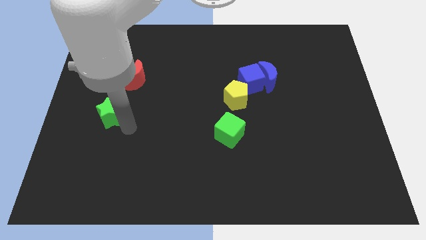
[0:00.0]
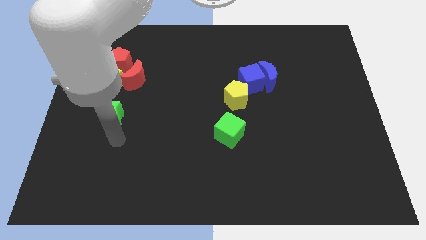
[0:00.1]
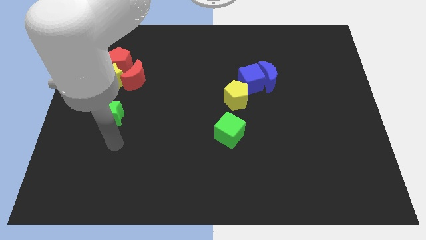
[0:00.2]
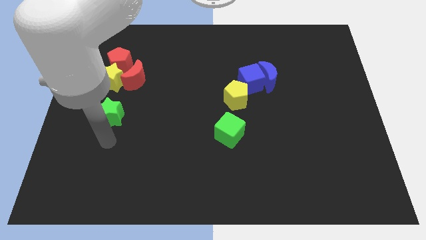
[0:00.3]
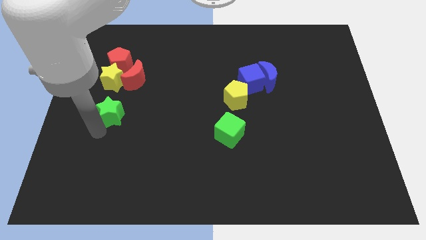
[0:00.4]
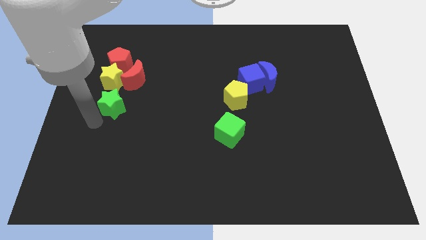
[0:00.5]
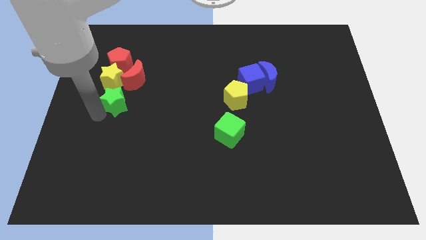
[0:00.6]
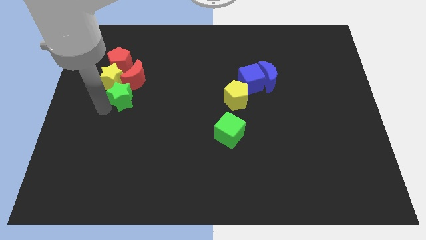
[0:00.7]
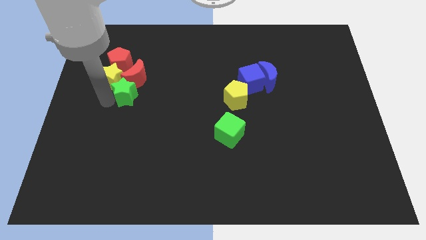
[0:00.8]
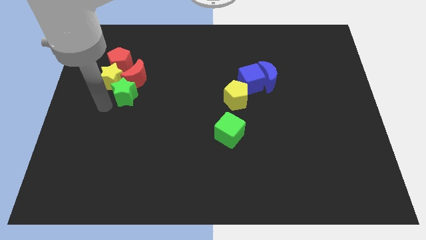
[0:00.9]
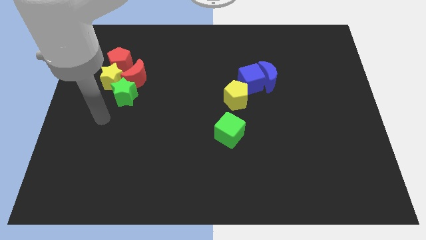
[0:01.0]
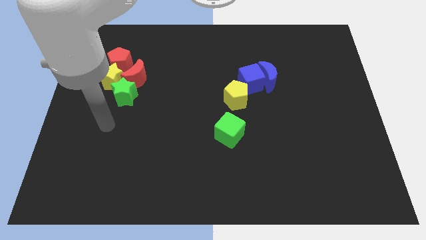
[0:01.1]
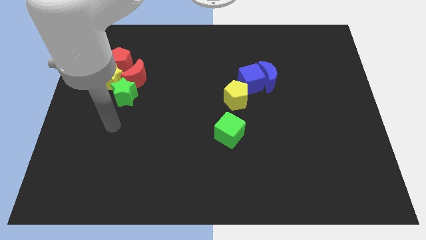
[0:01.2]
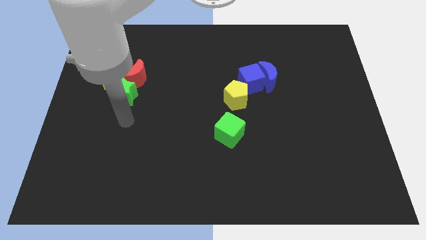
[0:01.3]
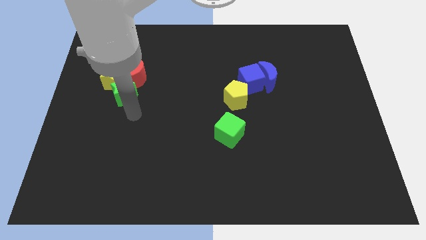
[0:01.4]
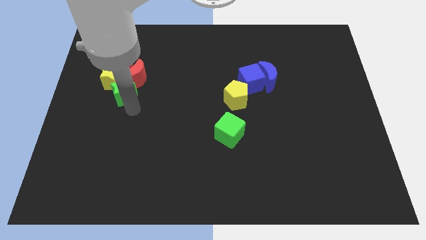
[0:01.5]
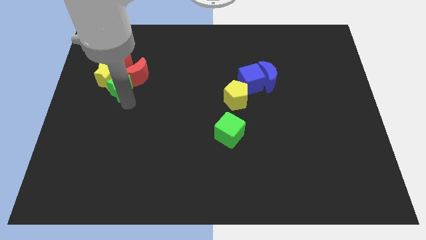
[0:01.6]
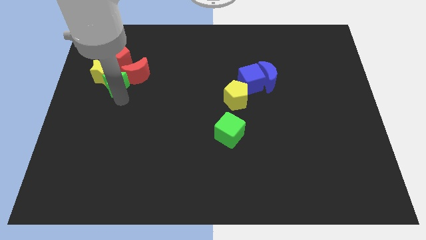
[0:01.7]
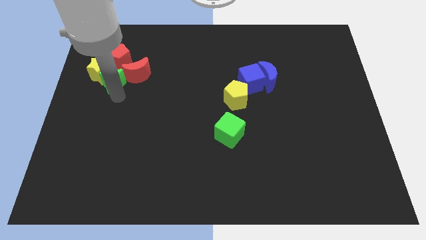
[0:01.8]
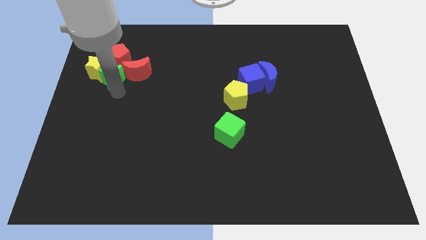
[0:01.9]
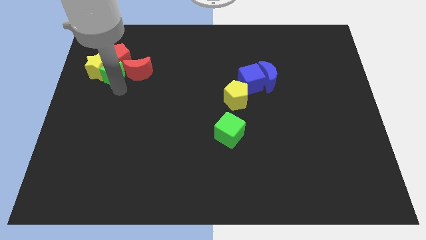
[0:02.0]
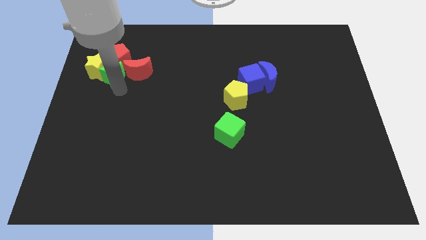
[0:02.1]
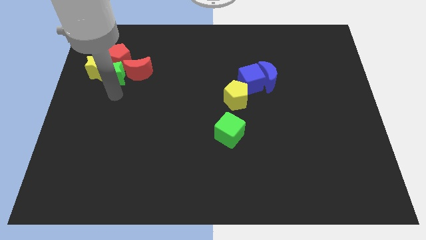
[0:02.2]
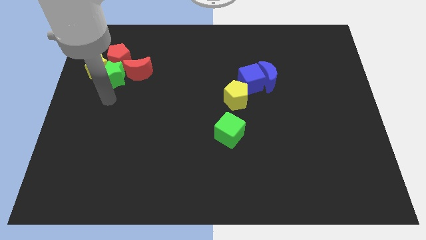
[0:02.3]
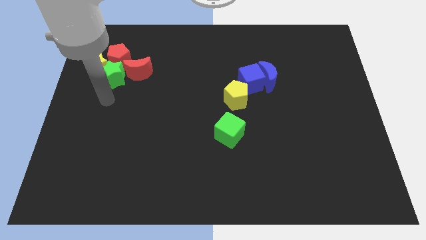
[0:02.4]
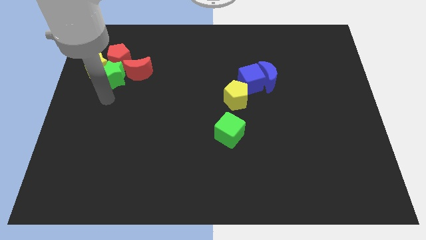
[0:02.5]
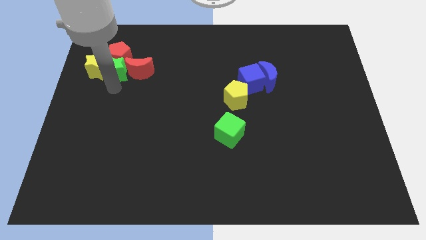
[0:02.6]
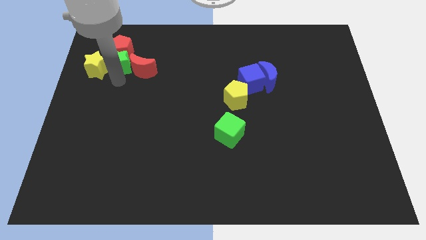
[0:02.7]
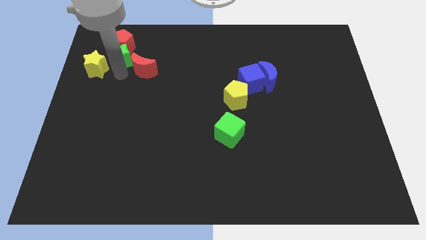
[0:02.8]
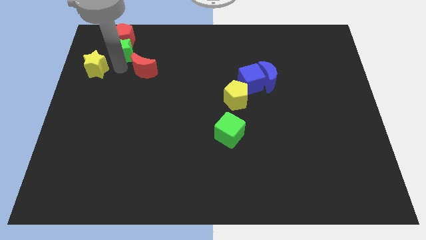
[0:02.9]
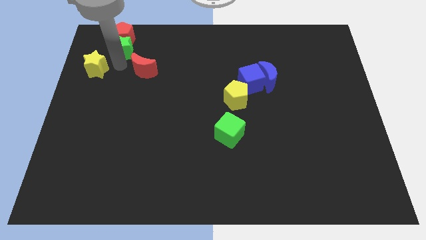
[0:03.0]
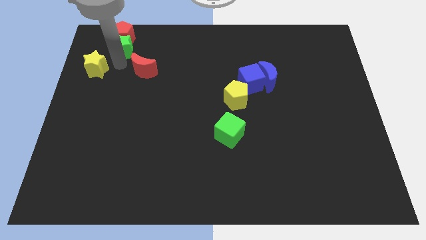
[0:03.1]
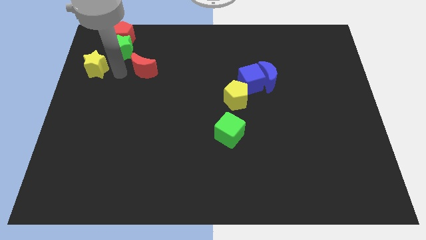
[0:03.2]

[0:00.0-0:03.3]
push green star into red pentagon

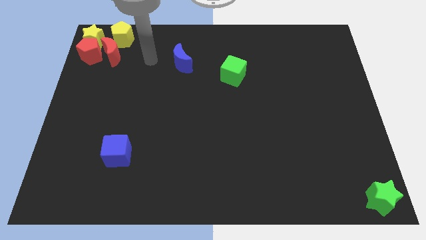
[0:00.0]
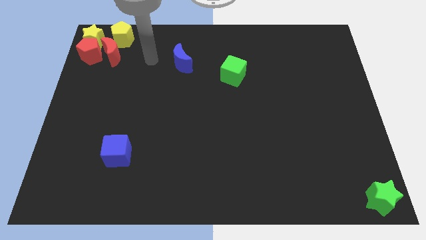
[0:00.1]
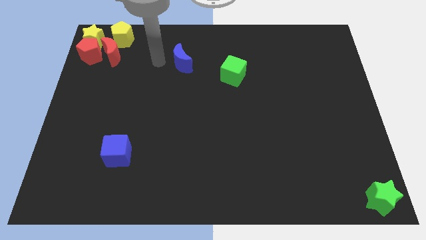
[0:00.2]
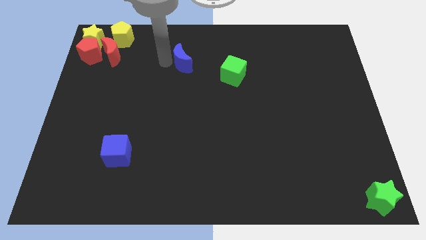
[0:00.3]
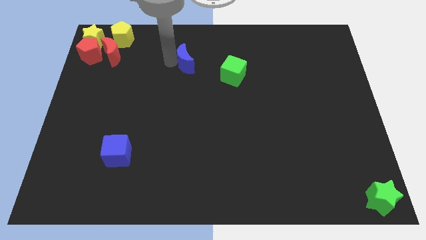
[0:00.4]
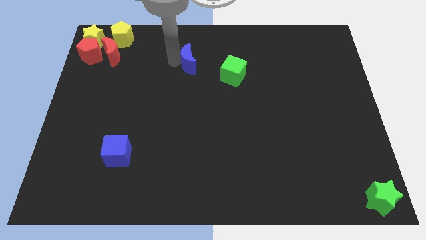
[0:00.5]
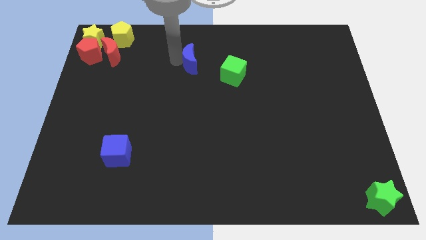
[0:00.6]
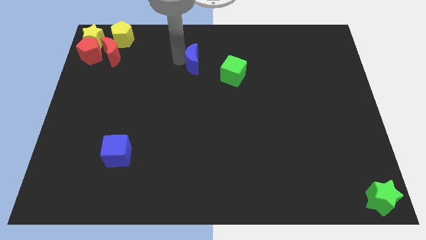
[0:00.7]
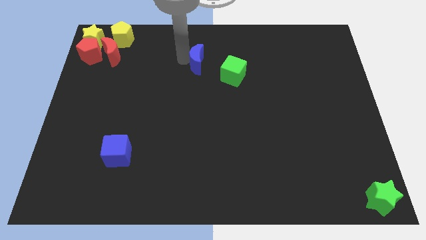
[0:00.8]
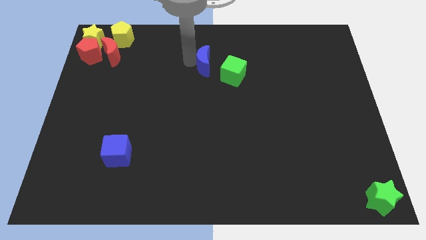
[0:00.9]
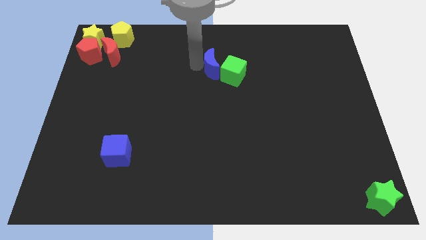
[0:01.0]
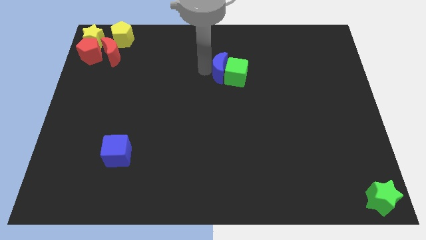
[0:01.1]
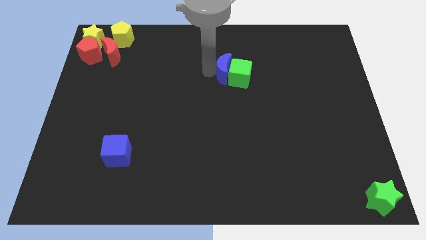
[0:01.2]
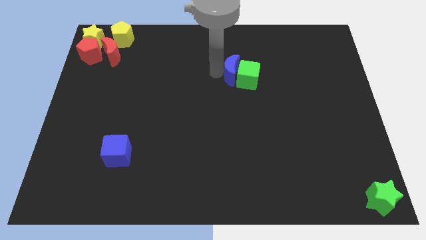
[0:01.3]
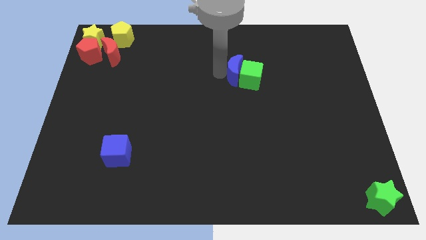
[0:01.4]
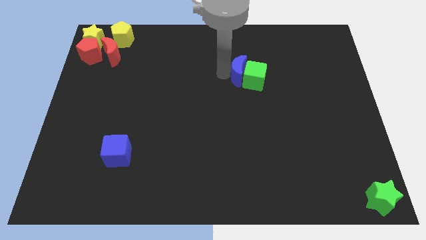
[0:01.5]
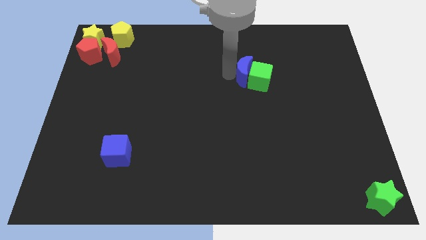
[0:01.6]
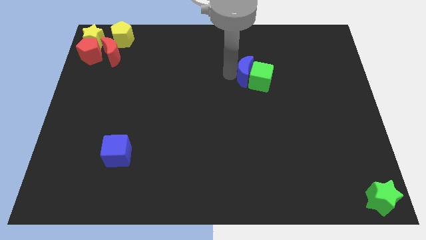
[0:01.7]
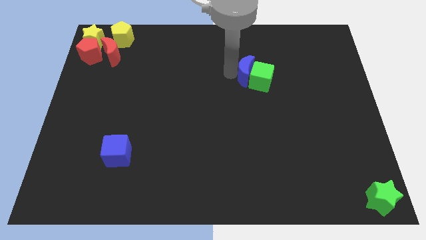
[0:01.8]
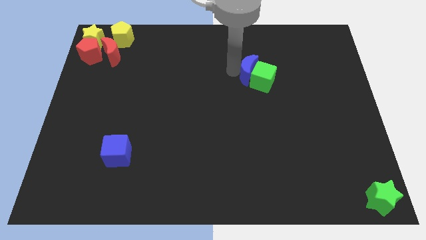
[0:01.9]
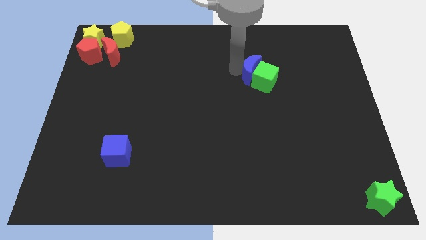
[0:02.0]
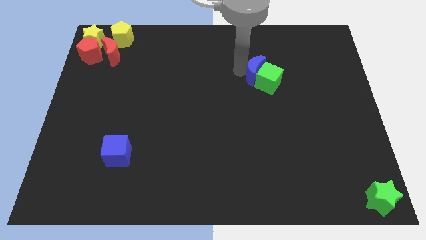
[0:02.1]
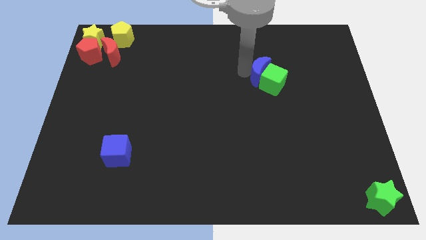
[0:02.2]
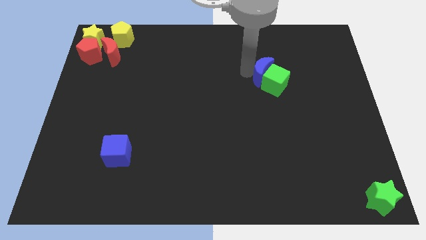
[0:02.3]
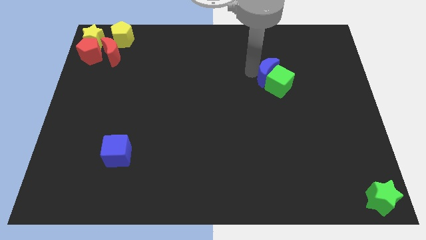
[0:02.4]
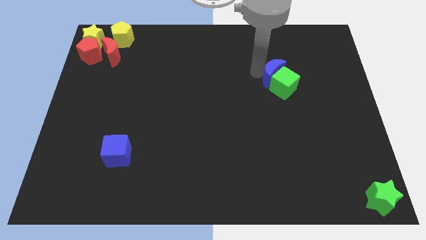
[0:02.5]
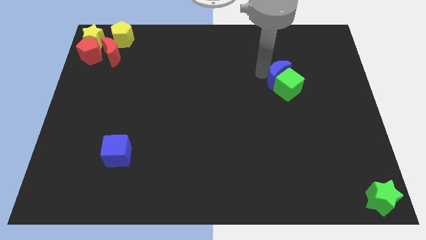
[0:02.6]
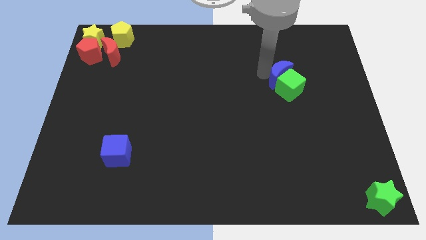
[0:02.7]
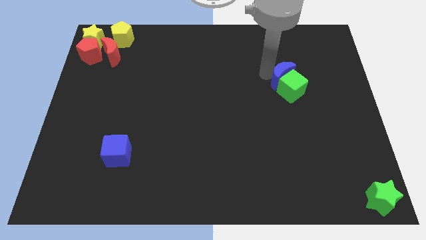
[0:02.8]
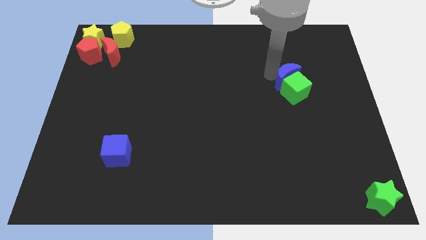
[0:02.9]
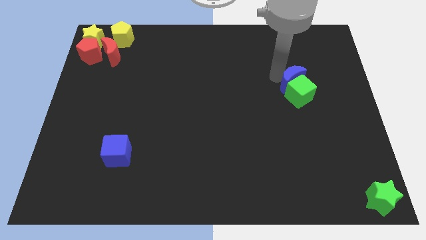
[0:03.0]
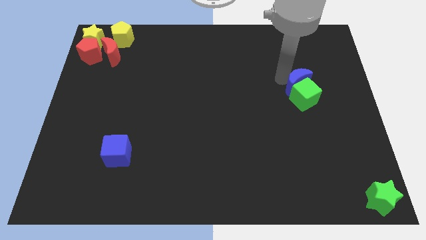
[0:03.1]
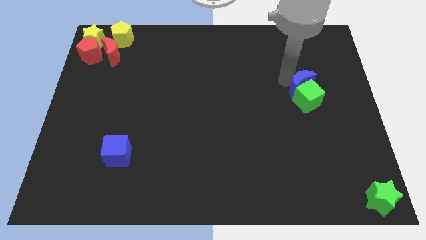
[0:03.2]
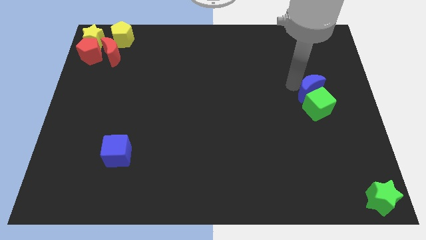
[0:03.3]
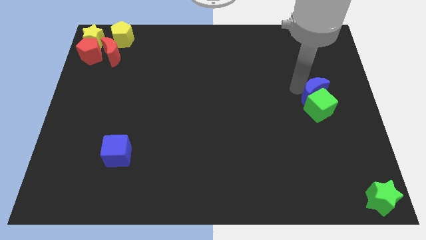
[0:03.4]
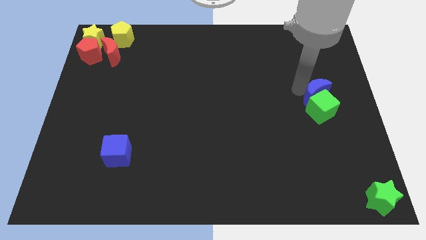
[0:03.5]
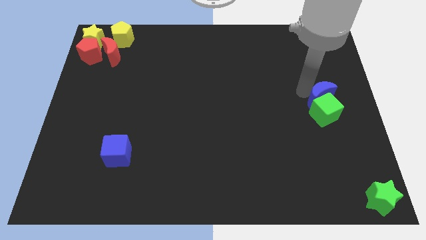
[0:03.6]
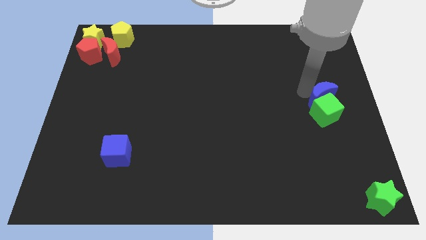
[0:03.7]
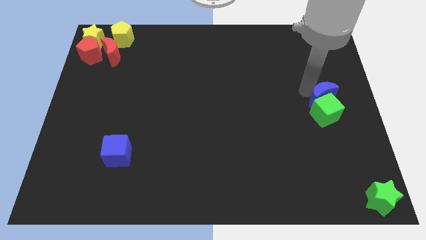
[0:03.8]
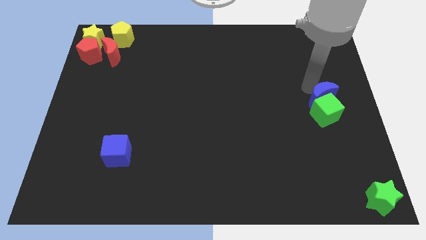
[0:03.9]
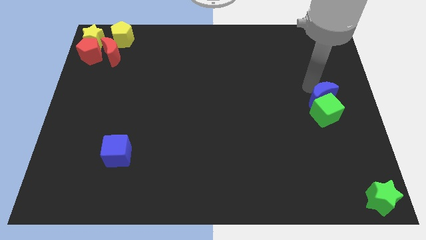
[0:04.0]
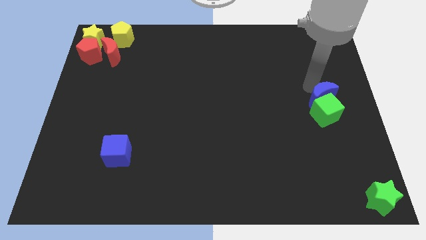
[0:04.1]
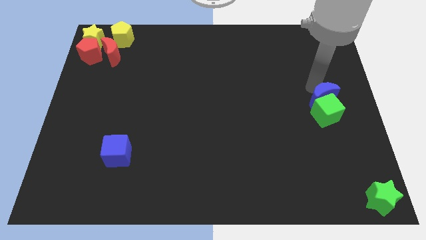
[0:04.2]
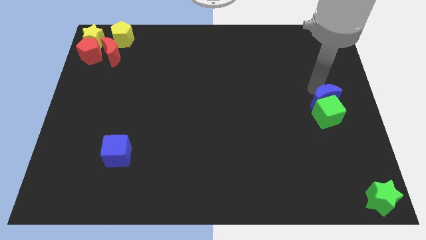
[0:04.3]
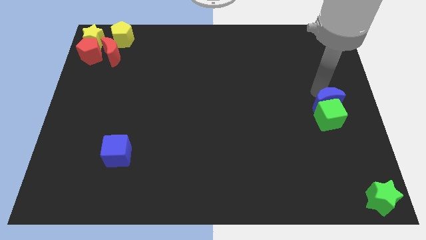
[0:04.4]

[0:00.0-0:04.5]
push the blue moon and green cube to the center right

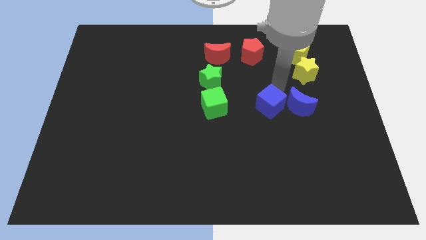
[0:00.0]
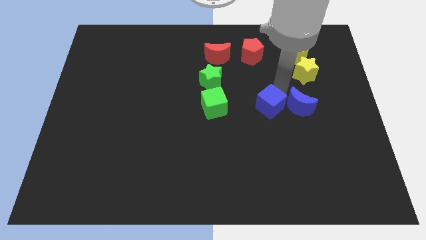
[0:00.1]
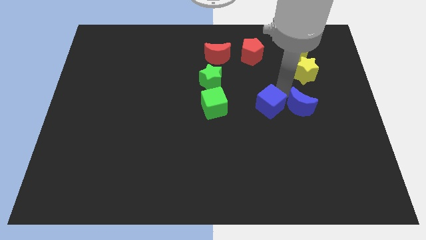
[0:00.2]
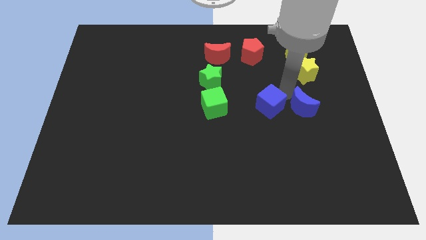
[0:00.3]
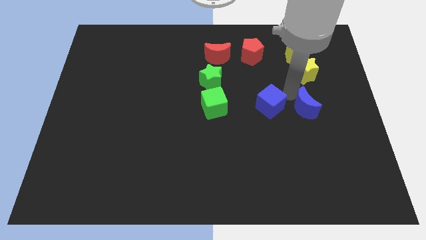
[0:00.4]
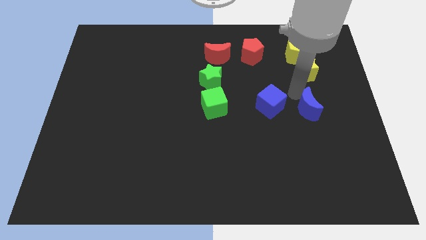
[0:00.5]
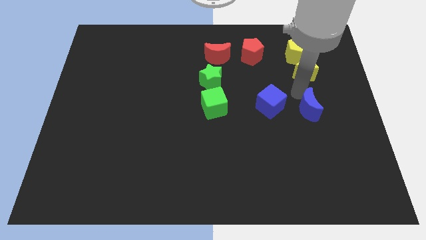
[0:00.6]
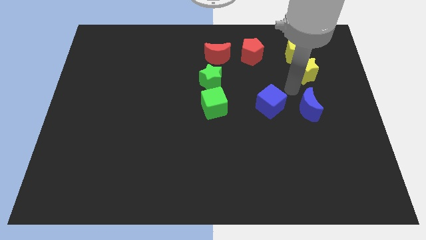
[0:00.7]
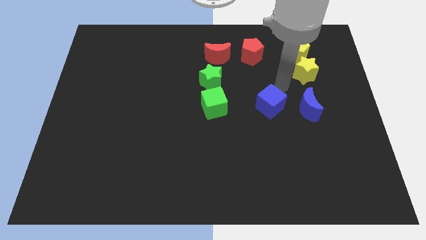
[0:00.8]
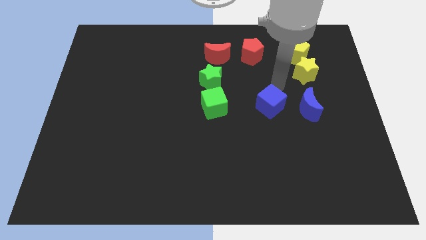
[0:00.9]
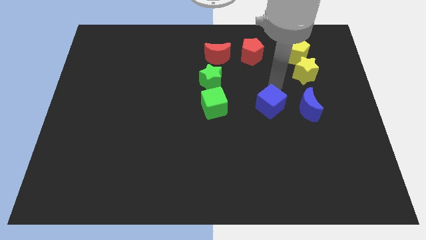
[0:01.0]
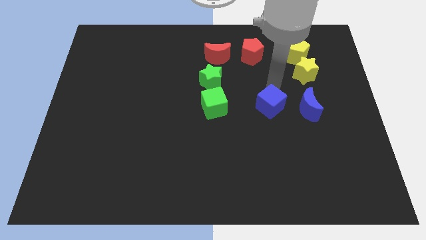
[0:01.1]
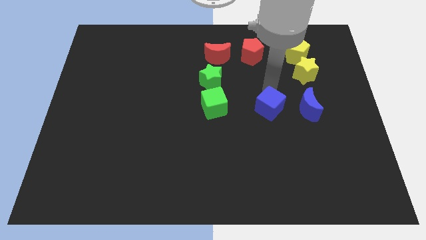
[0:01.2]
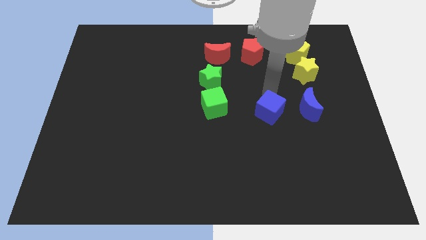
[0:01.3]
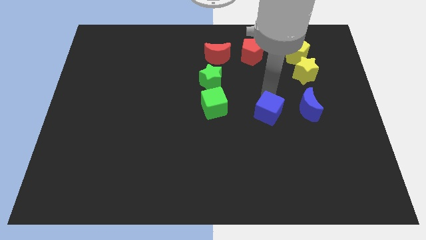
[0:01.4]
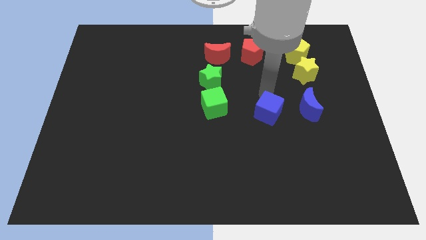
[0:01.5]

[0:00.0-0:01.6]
separate the blue blocks
